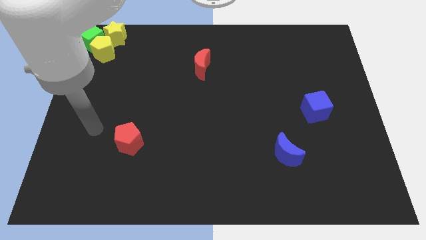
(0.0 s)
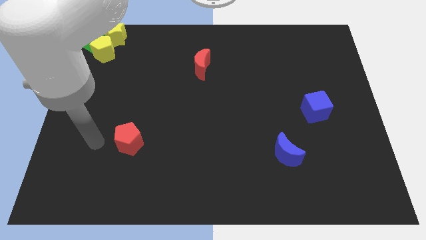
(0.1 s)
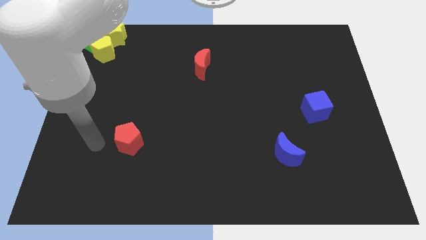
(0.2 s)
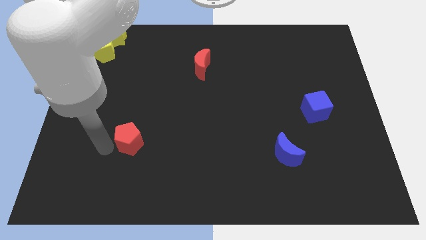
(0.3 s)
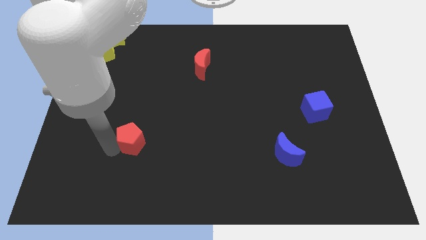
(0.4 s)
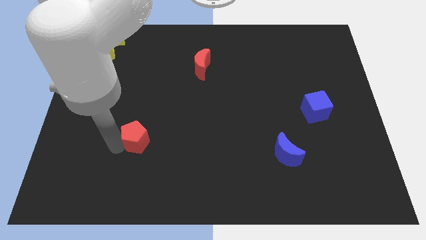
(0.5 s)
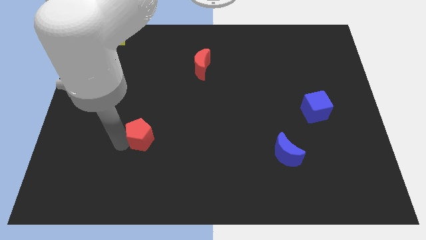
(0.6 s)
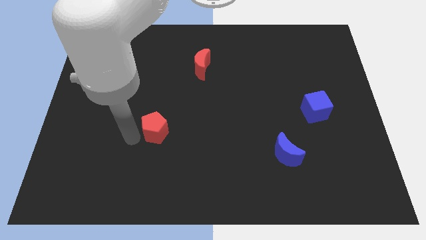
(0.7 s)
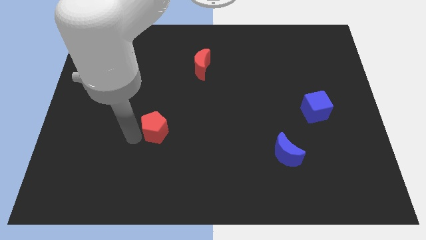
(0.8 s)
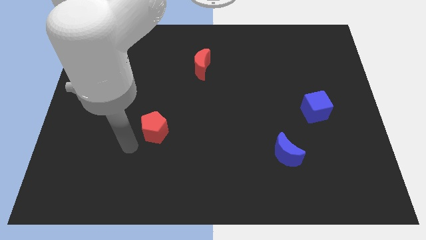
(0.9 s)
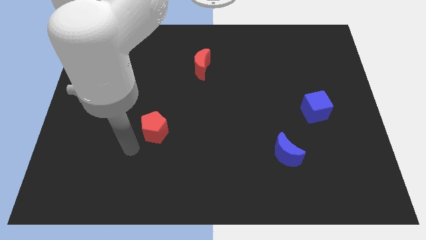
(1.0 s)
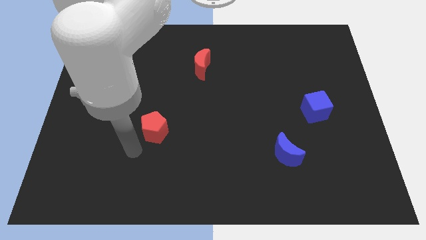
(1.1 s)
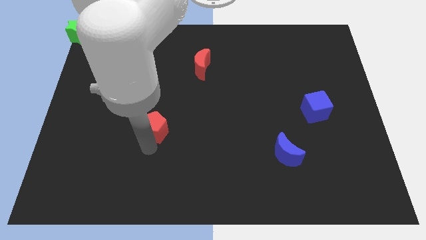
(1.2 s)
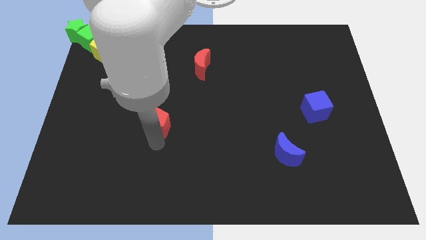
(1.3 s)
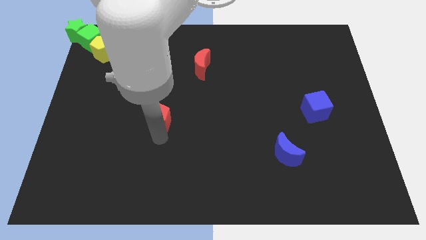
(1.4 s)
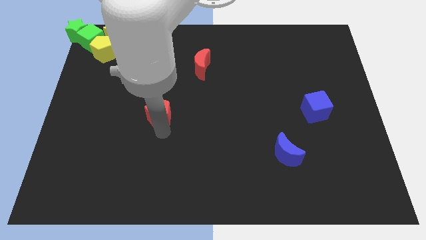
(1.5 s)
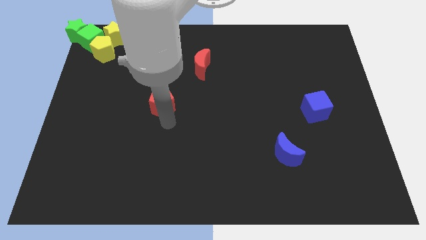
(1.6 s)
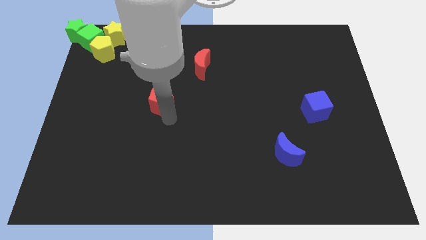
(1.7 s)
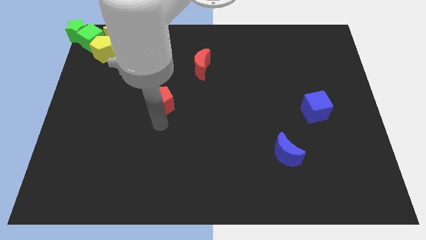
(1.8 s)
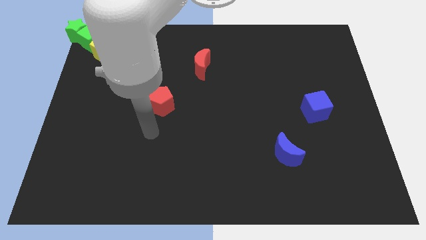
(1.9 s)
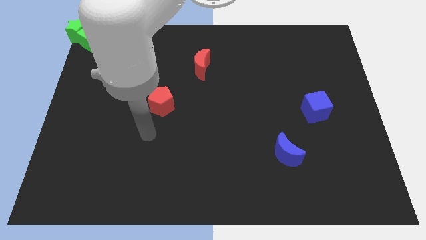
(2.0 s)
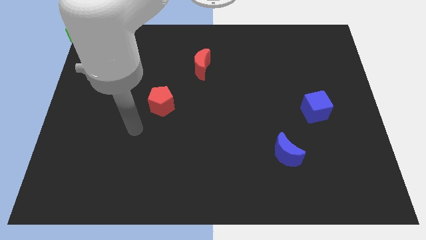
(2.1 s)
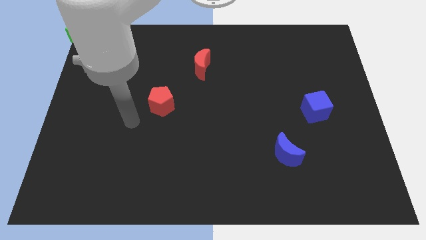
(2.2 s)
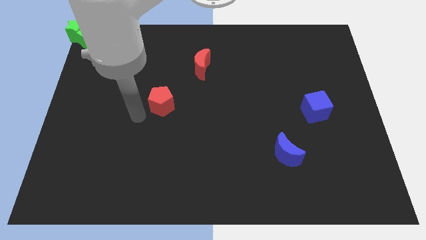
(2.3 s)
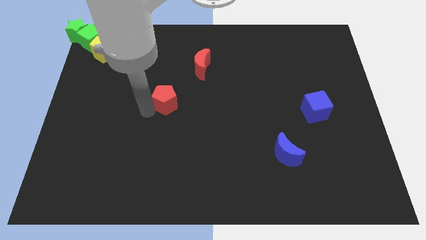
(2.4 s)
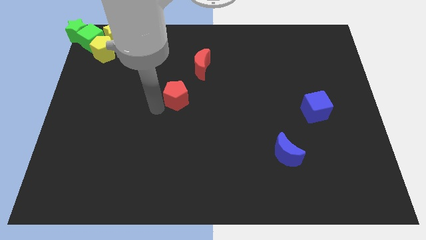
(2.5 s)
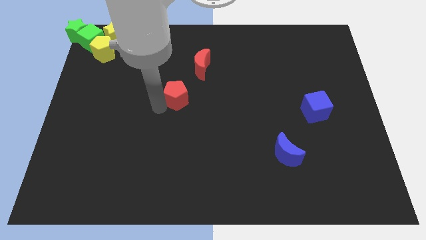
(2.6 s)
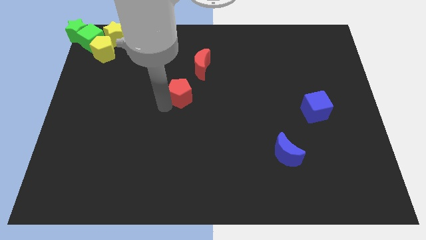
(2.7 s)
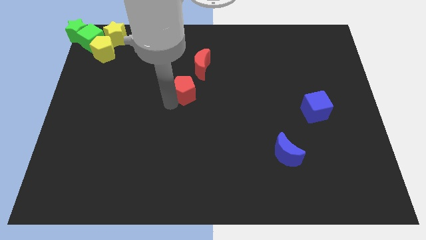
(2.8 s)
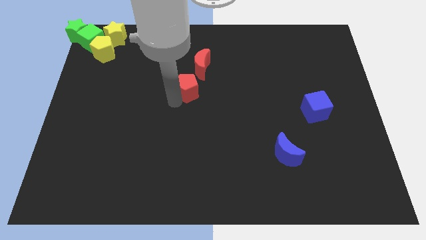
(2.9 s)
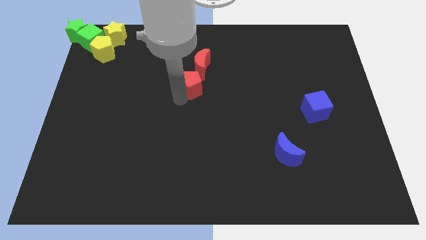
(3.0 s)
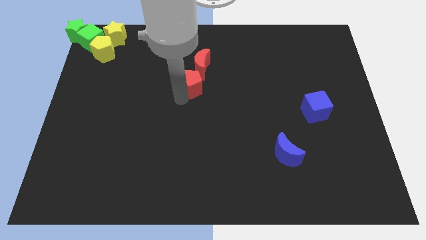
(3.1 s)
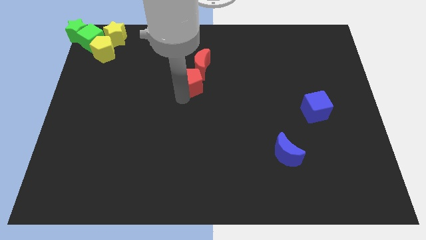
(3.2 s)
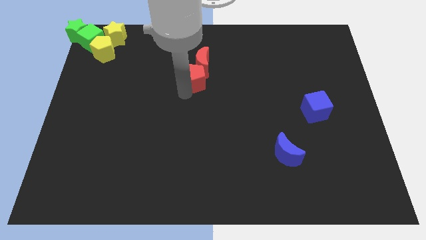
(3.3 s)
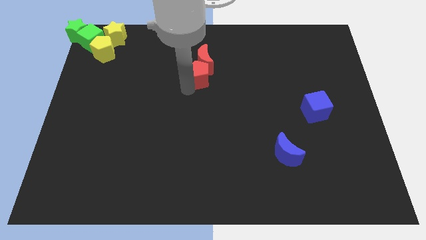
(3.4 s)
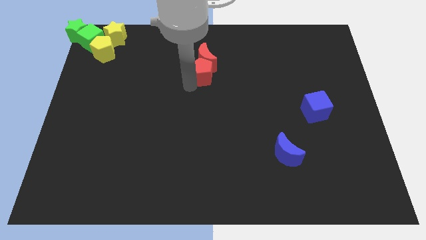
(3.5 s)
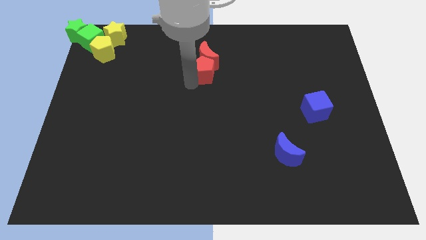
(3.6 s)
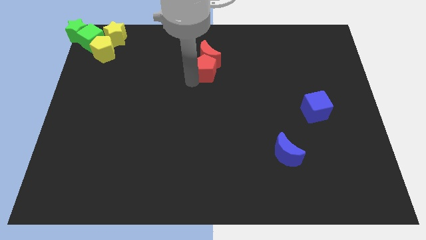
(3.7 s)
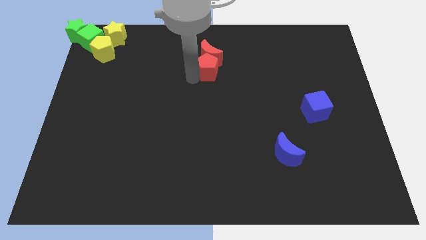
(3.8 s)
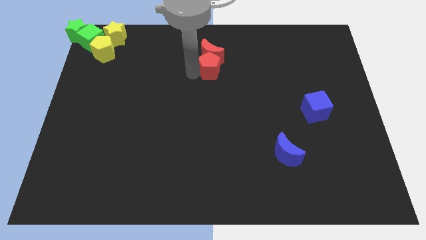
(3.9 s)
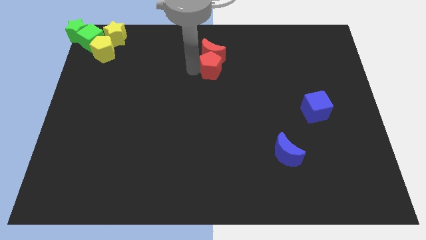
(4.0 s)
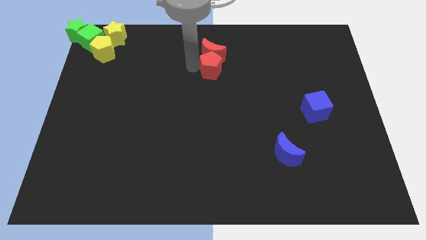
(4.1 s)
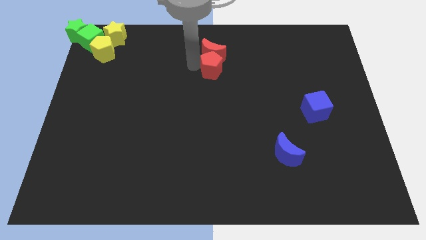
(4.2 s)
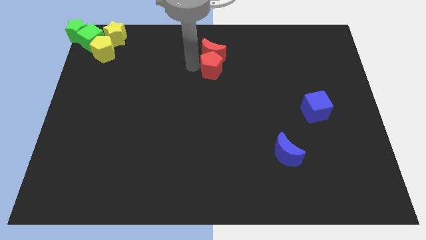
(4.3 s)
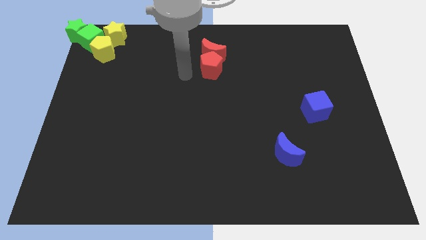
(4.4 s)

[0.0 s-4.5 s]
push the red pentagon into the red moon

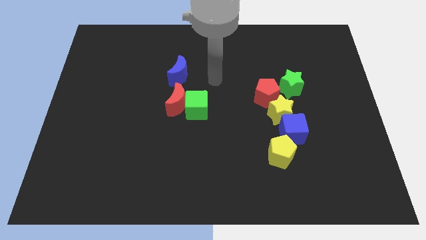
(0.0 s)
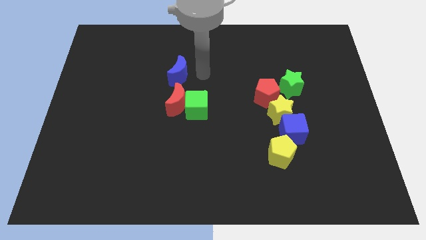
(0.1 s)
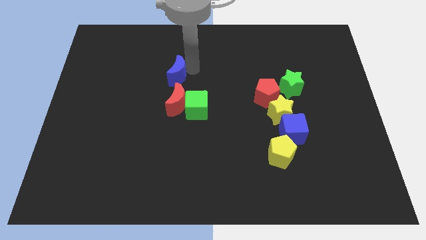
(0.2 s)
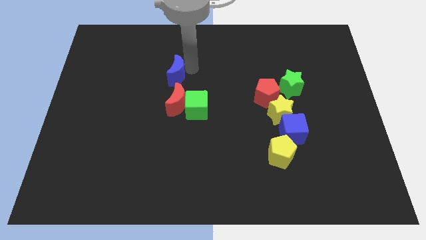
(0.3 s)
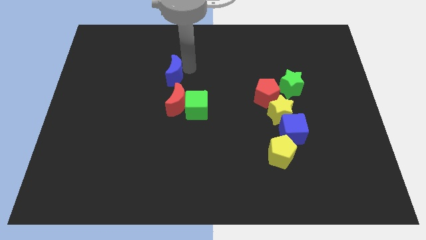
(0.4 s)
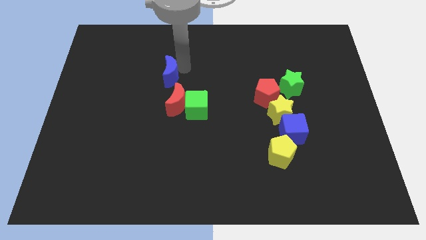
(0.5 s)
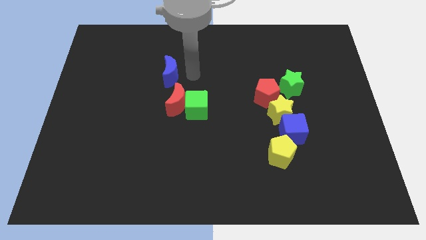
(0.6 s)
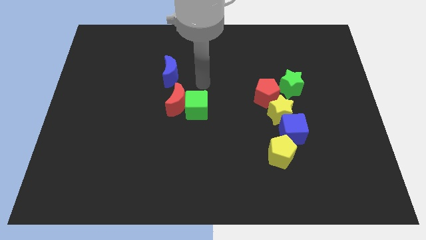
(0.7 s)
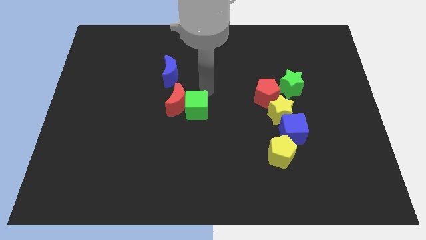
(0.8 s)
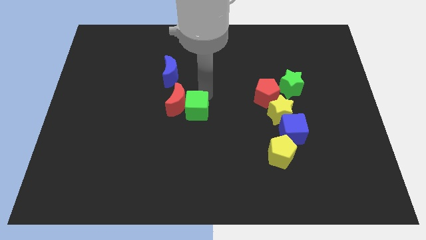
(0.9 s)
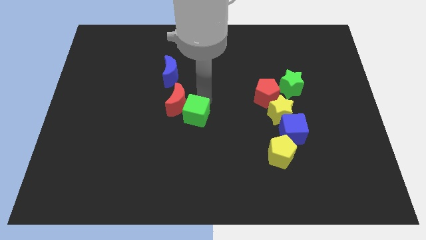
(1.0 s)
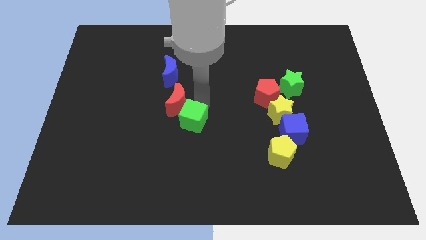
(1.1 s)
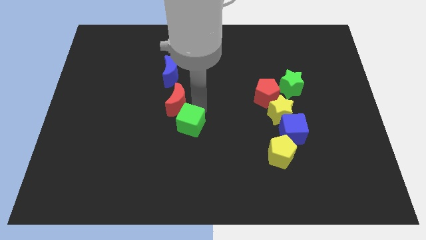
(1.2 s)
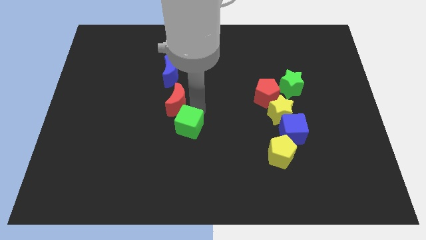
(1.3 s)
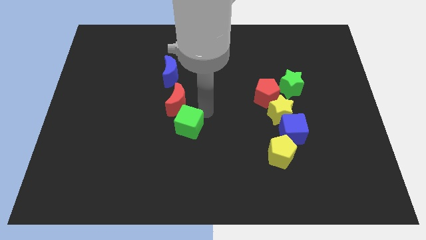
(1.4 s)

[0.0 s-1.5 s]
slightly push down the green cube

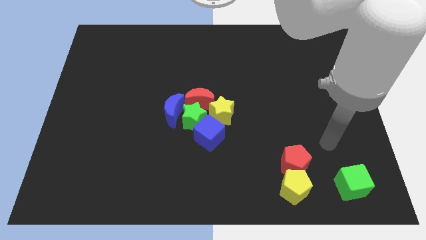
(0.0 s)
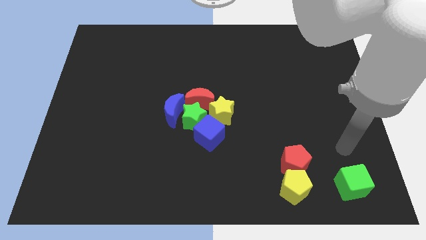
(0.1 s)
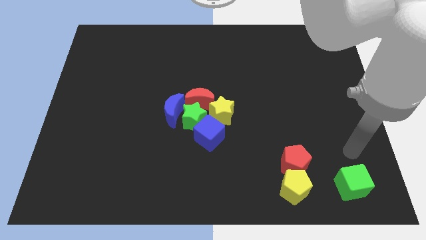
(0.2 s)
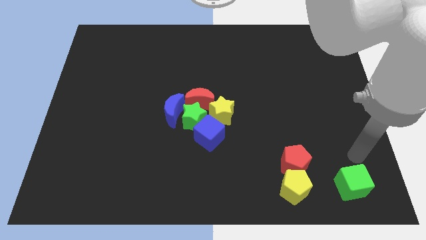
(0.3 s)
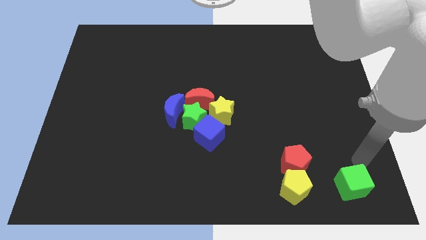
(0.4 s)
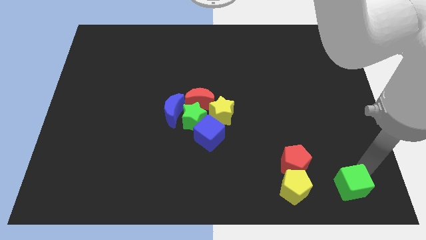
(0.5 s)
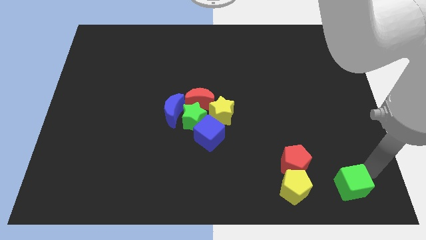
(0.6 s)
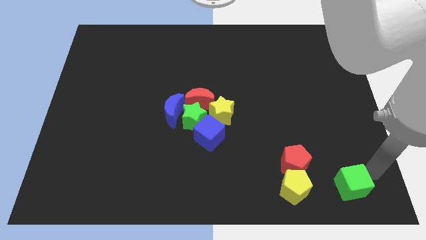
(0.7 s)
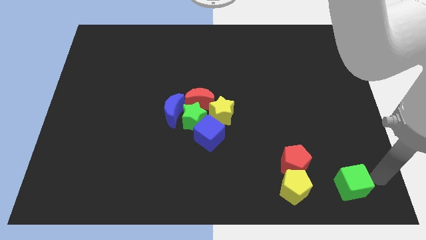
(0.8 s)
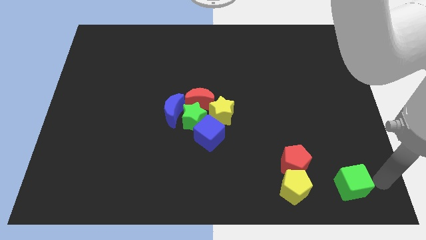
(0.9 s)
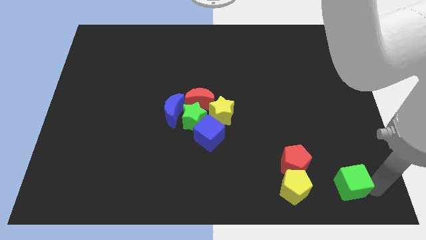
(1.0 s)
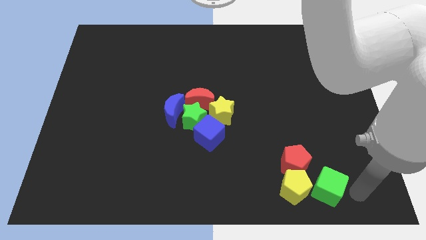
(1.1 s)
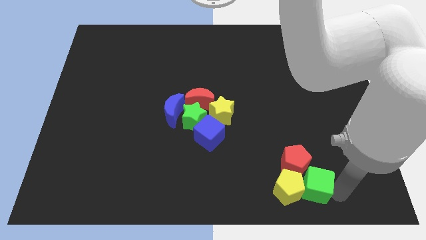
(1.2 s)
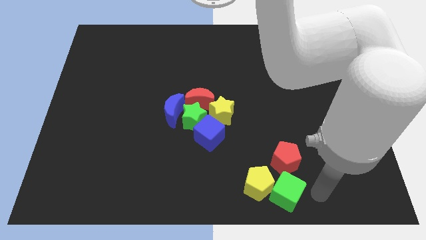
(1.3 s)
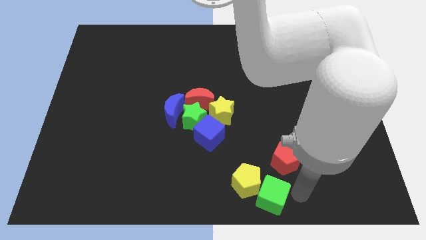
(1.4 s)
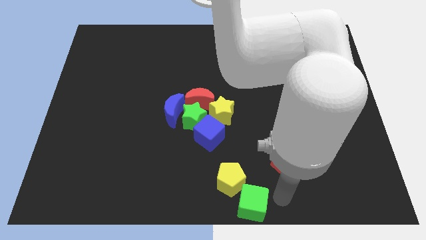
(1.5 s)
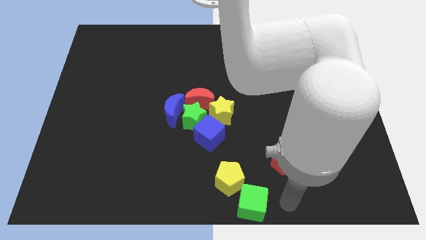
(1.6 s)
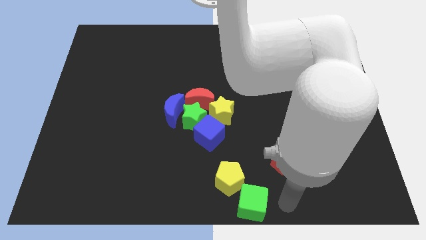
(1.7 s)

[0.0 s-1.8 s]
push the green cube into yellow pentagon towards left

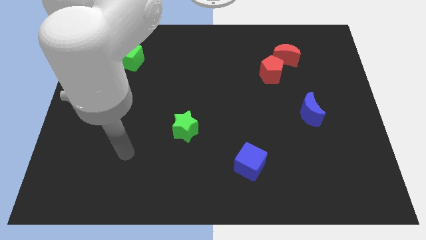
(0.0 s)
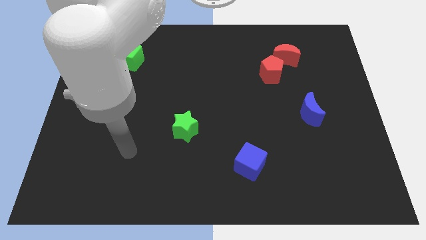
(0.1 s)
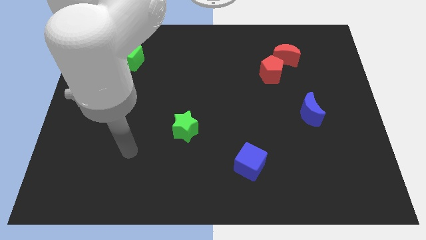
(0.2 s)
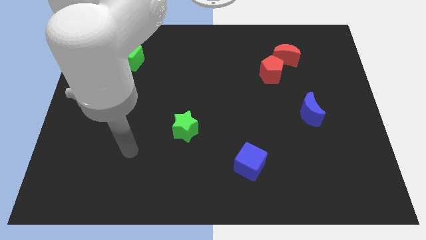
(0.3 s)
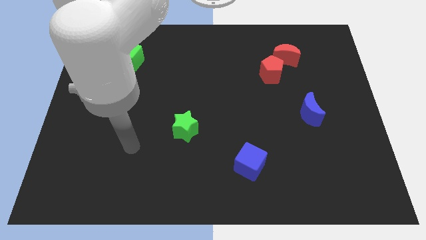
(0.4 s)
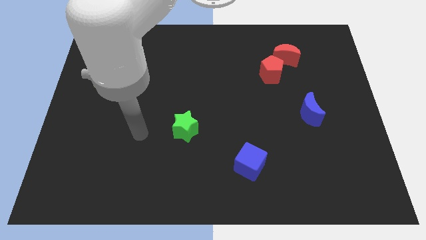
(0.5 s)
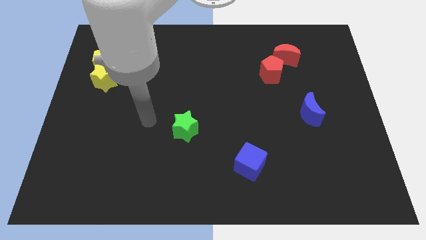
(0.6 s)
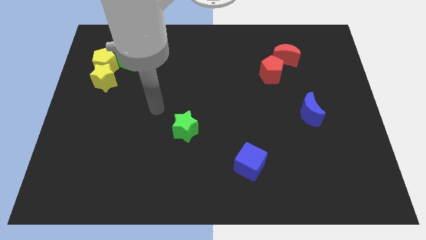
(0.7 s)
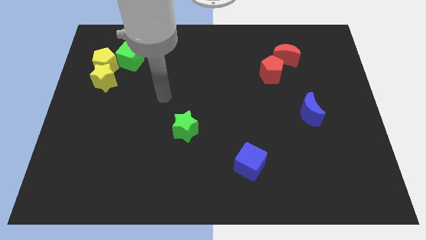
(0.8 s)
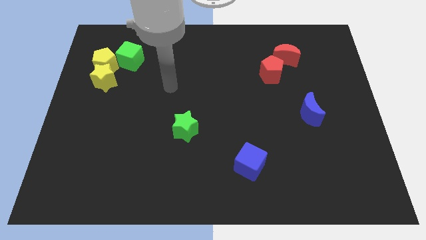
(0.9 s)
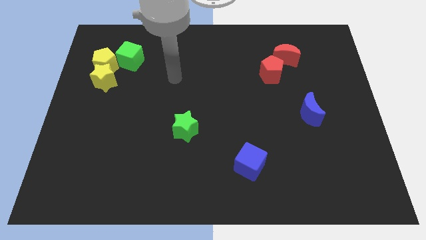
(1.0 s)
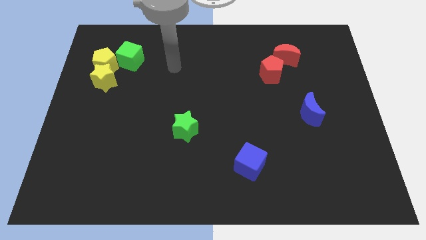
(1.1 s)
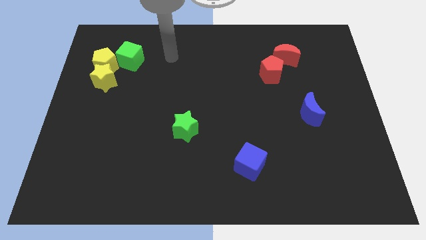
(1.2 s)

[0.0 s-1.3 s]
point your arm at the right of the green cube
